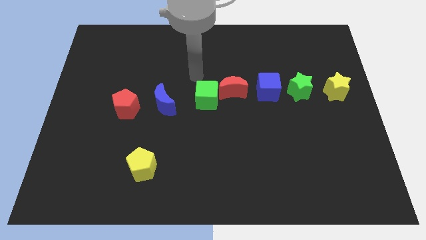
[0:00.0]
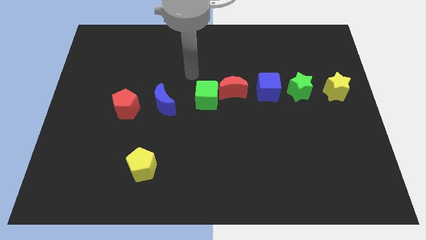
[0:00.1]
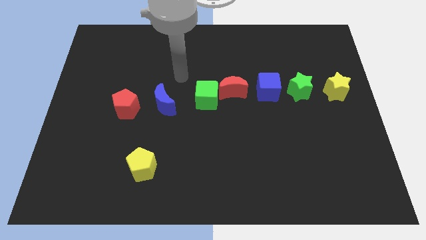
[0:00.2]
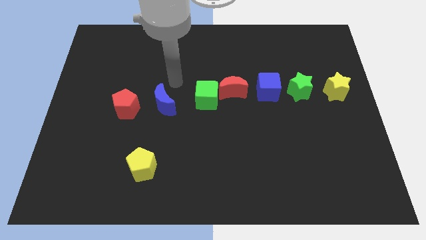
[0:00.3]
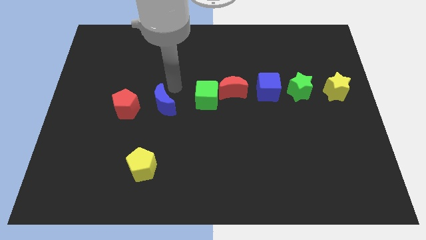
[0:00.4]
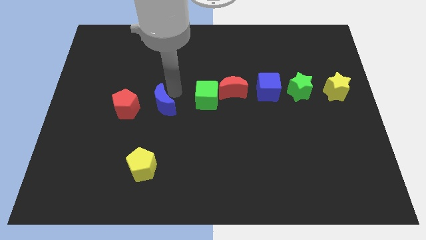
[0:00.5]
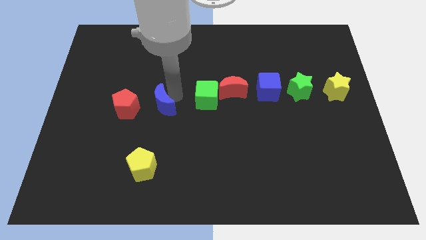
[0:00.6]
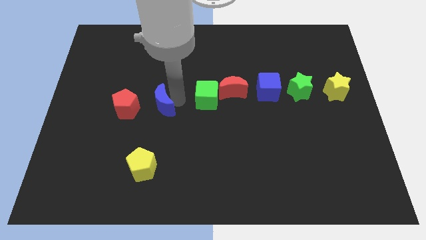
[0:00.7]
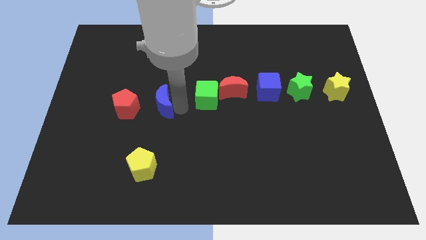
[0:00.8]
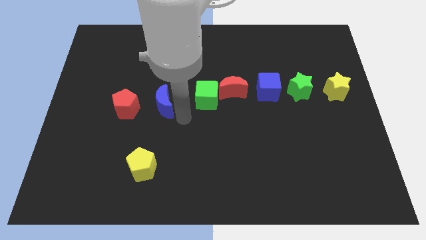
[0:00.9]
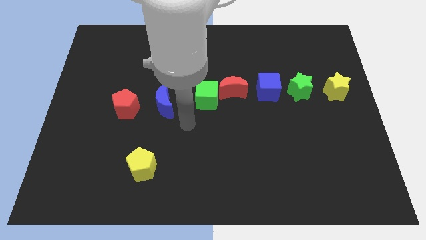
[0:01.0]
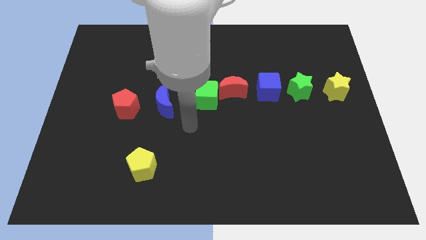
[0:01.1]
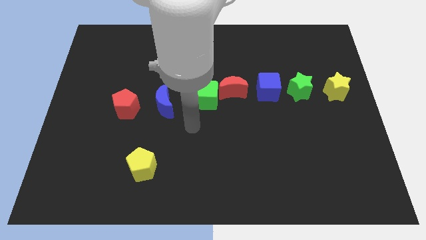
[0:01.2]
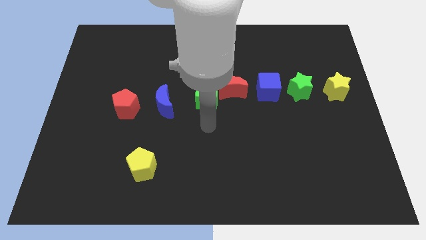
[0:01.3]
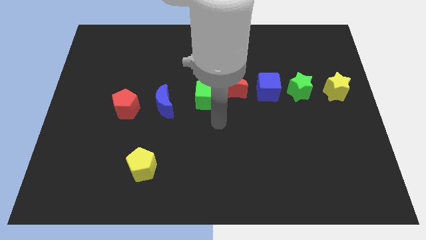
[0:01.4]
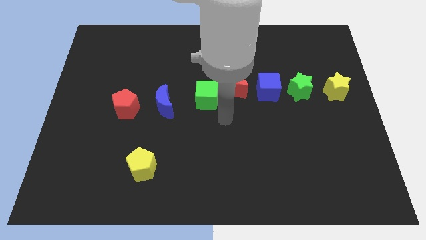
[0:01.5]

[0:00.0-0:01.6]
move your hand below the red moon

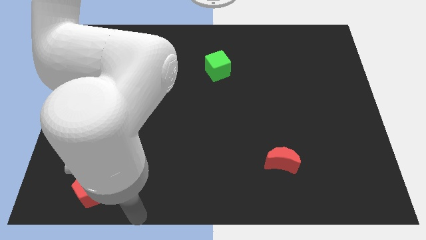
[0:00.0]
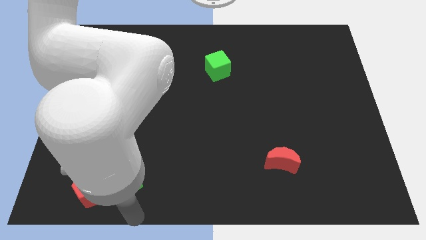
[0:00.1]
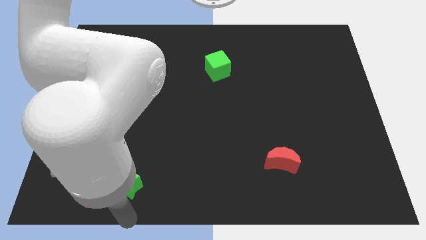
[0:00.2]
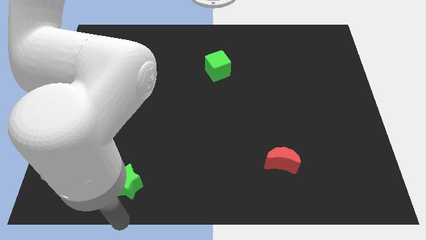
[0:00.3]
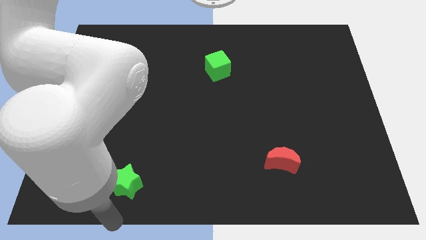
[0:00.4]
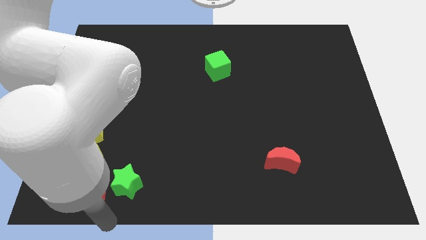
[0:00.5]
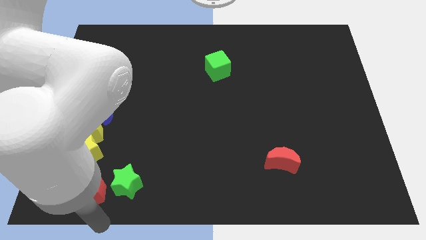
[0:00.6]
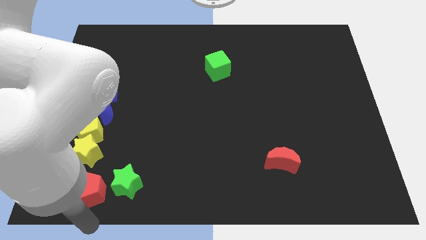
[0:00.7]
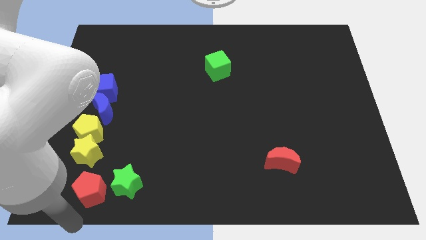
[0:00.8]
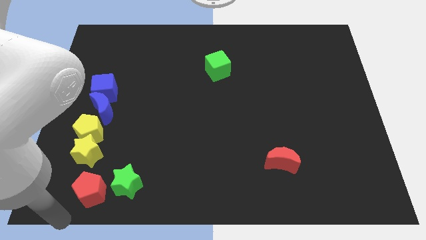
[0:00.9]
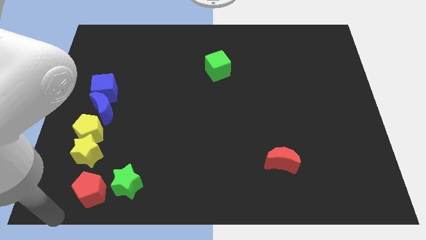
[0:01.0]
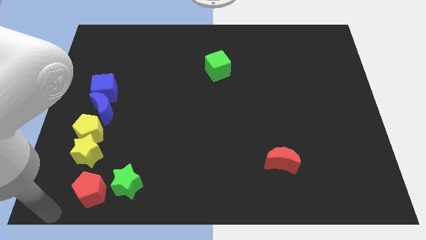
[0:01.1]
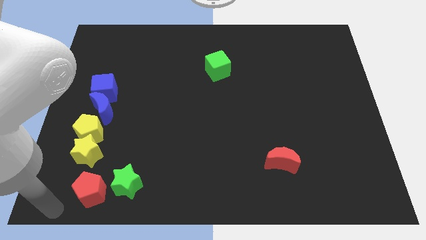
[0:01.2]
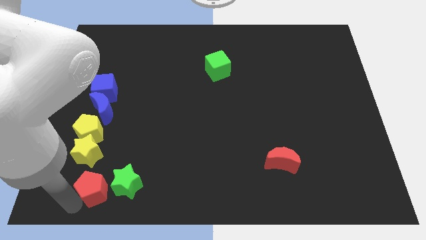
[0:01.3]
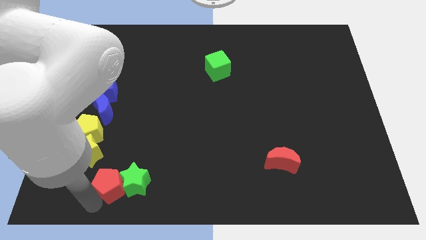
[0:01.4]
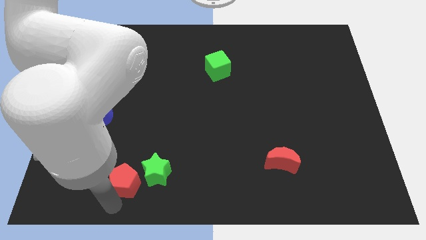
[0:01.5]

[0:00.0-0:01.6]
move the red pentagon into the green star

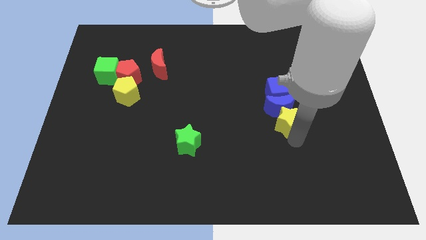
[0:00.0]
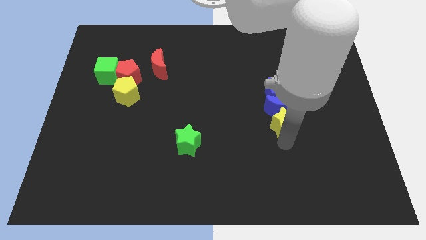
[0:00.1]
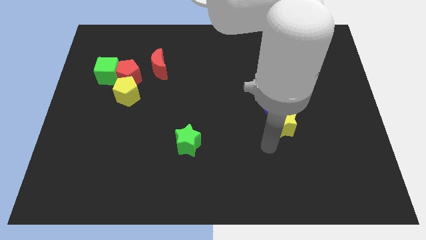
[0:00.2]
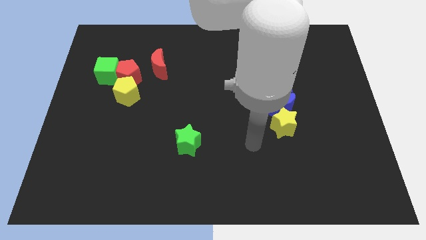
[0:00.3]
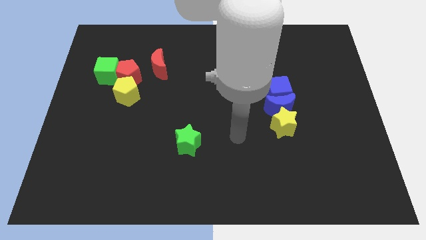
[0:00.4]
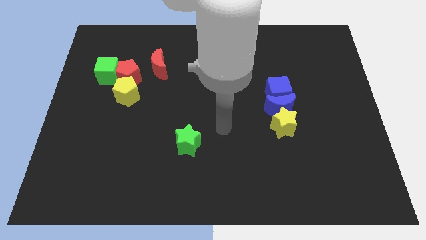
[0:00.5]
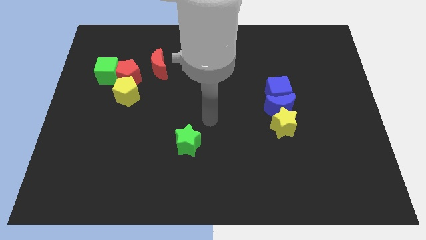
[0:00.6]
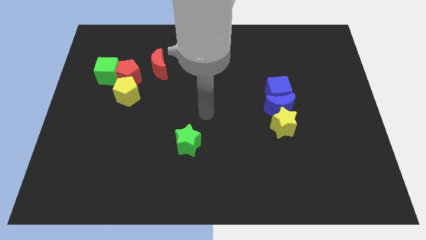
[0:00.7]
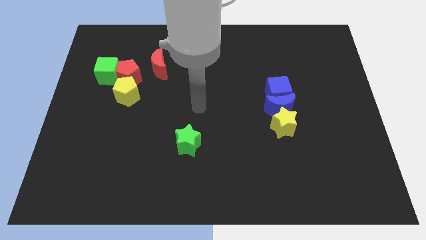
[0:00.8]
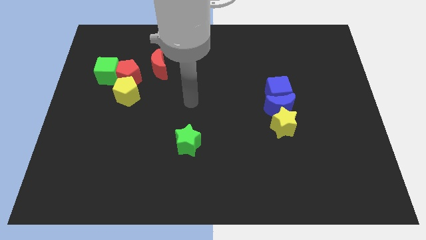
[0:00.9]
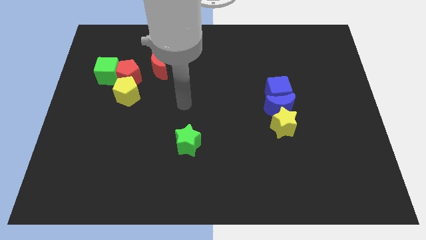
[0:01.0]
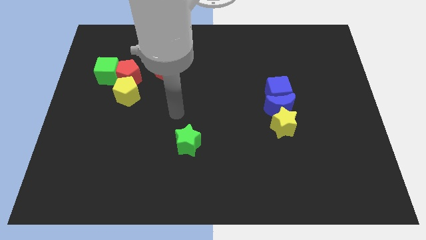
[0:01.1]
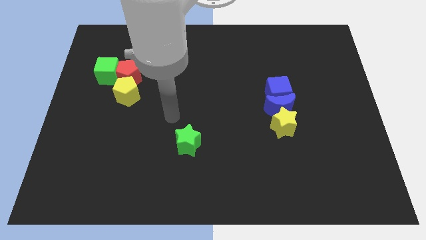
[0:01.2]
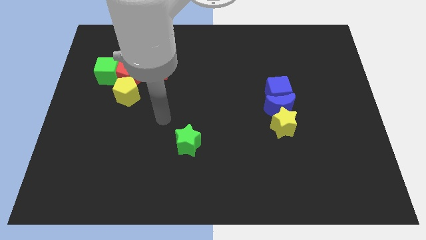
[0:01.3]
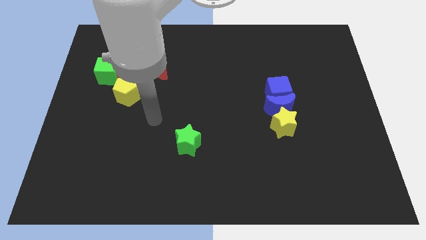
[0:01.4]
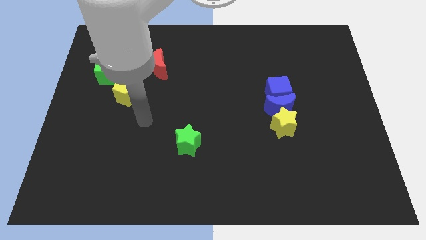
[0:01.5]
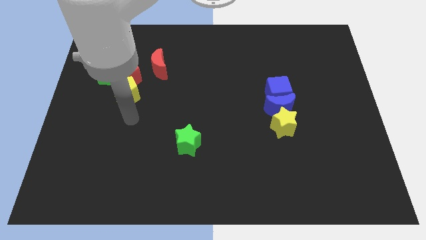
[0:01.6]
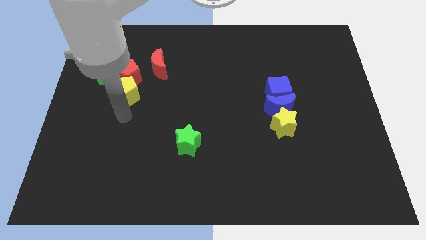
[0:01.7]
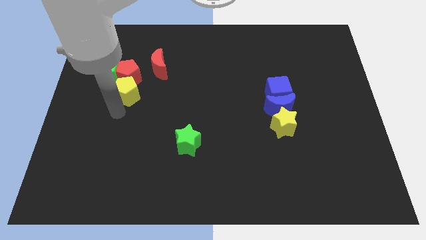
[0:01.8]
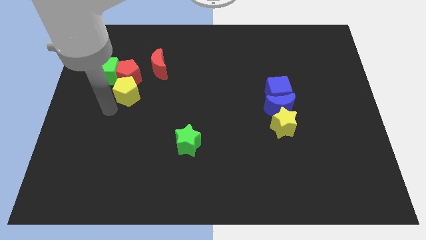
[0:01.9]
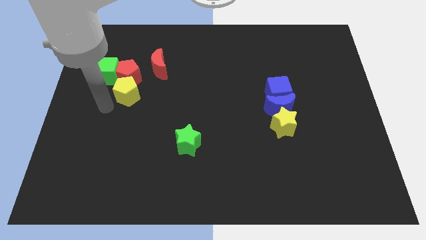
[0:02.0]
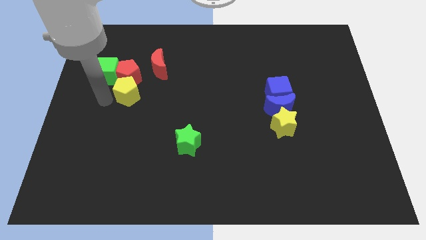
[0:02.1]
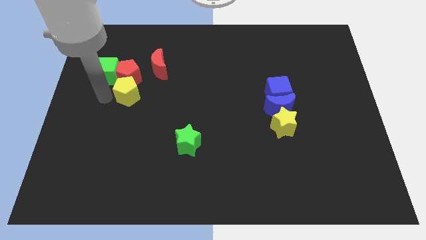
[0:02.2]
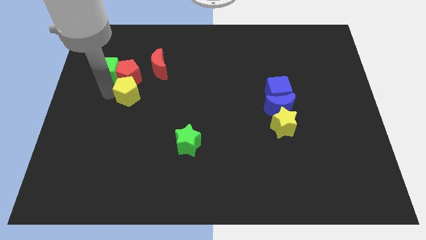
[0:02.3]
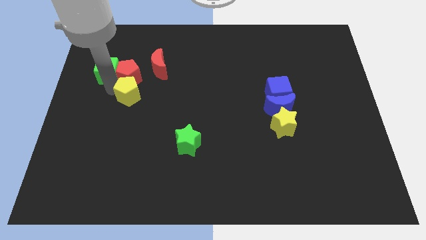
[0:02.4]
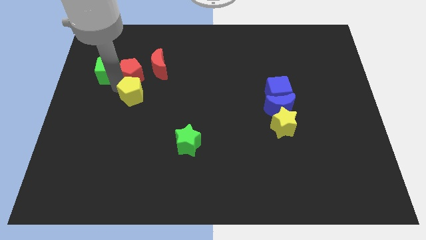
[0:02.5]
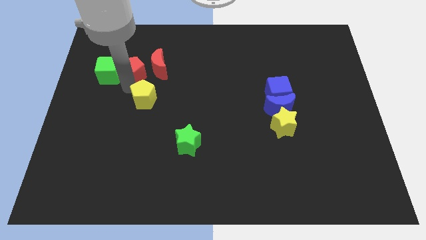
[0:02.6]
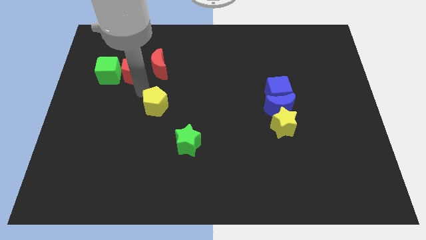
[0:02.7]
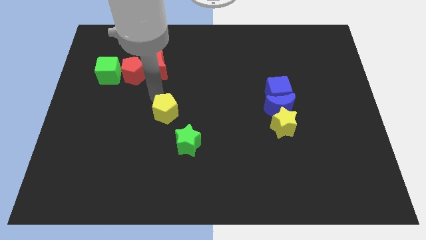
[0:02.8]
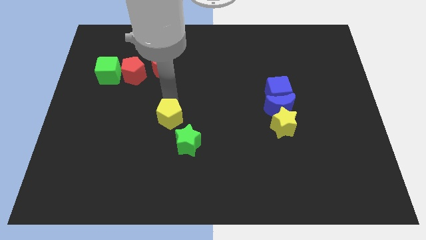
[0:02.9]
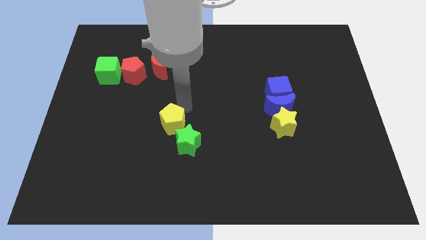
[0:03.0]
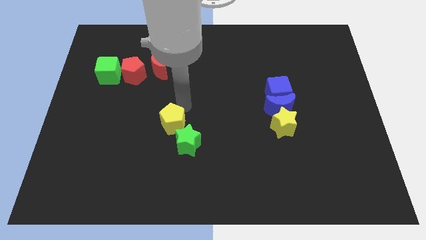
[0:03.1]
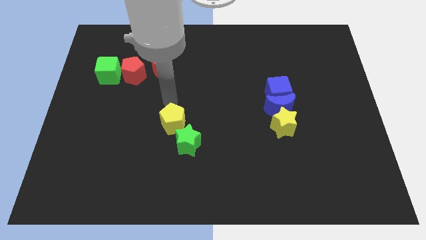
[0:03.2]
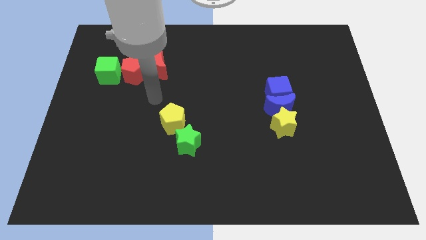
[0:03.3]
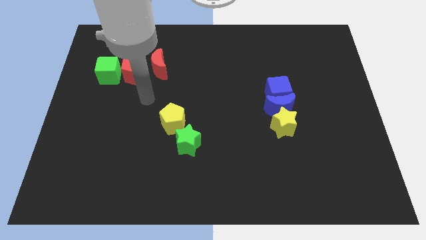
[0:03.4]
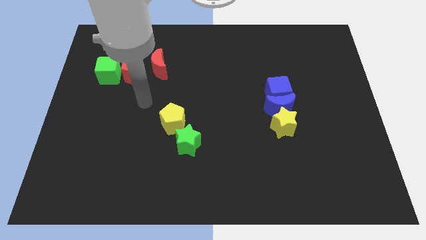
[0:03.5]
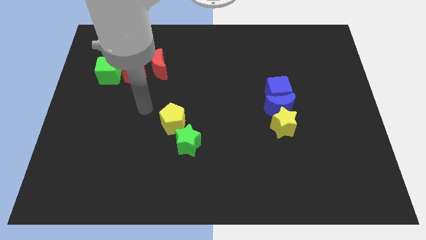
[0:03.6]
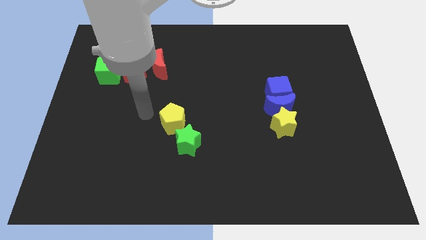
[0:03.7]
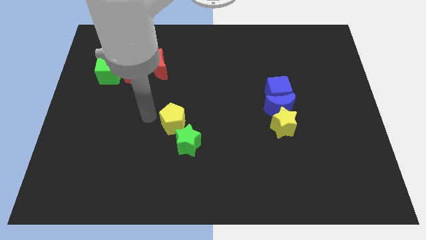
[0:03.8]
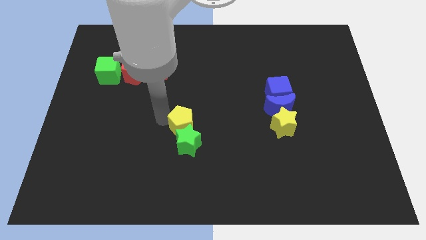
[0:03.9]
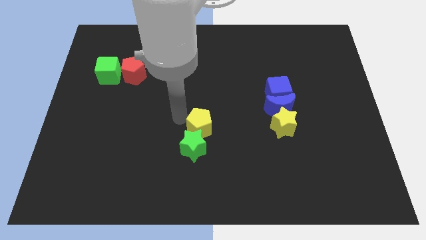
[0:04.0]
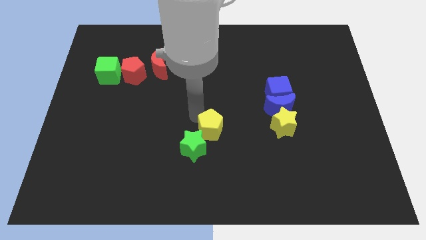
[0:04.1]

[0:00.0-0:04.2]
slide the yellow pentgaon into the top side of teh green star

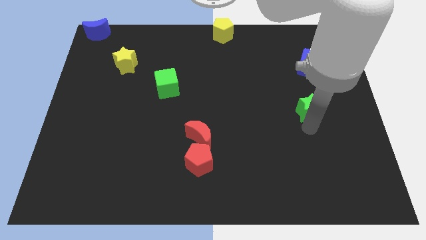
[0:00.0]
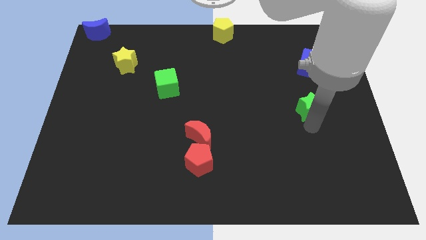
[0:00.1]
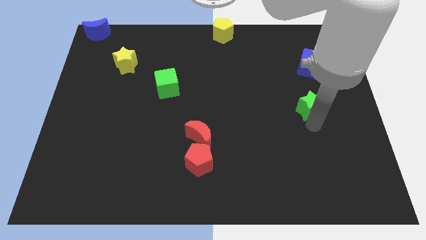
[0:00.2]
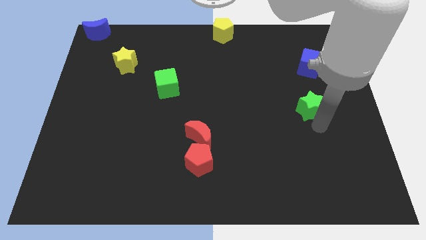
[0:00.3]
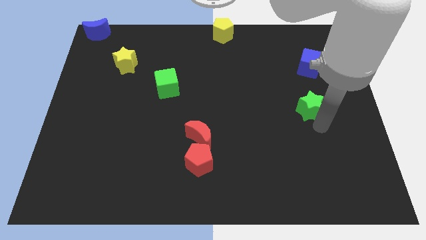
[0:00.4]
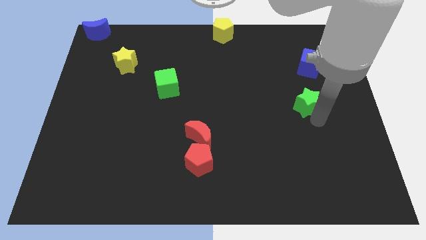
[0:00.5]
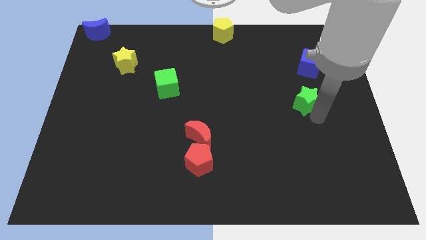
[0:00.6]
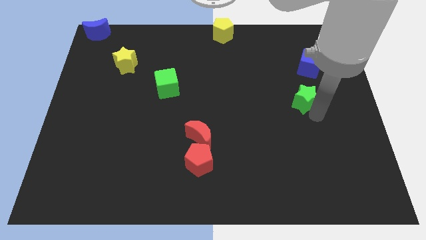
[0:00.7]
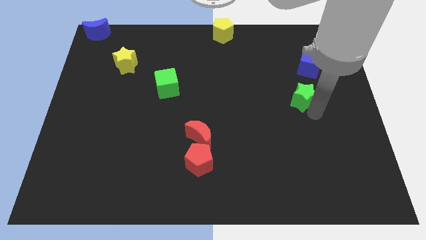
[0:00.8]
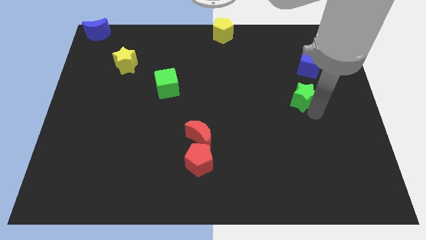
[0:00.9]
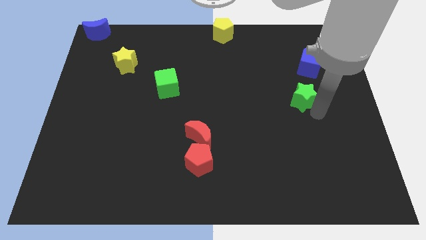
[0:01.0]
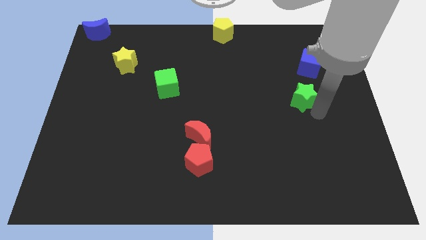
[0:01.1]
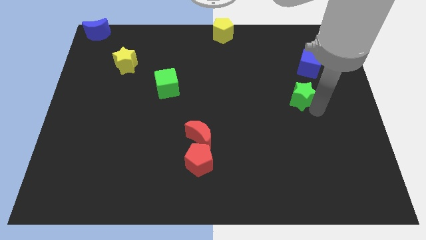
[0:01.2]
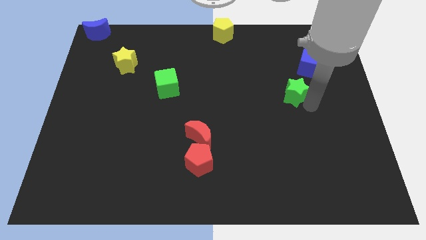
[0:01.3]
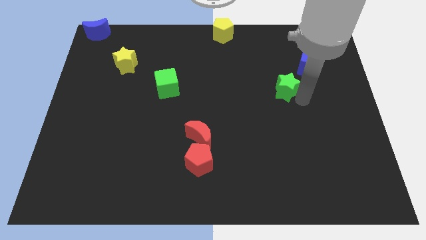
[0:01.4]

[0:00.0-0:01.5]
slide the green star up slightly
